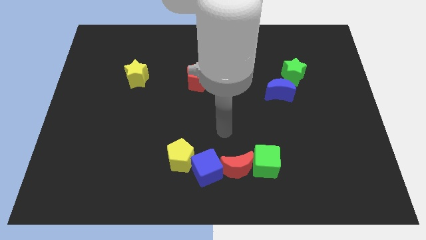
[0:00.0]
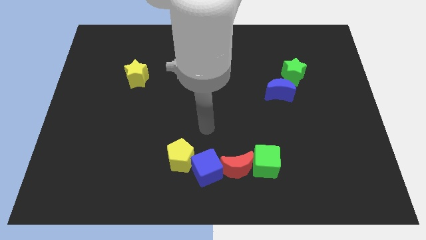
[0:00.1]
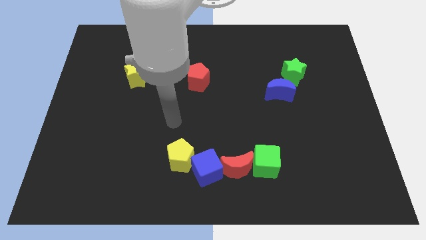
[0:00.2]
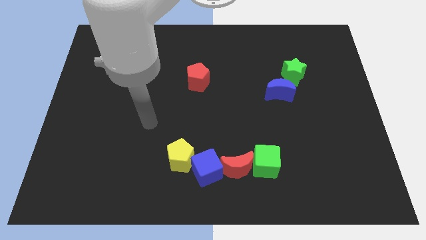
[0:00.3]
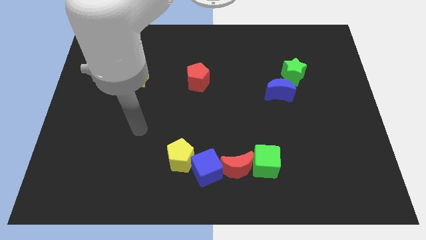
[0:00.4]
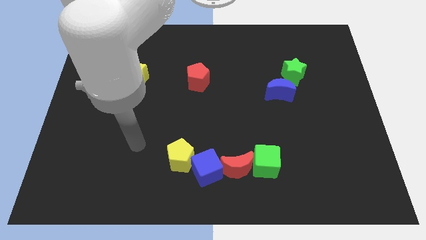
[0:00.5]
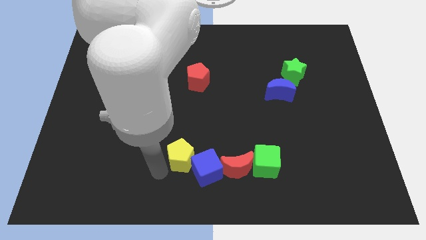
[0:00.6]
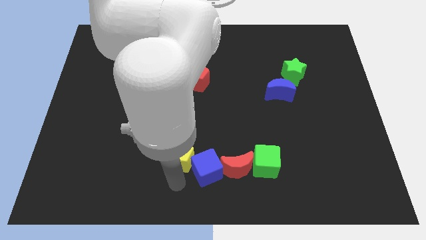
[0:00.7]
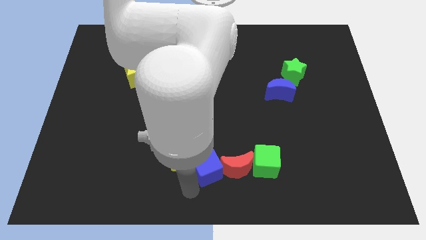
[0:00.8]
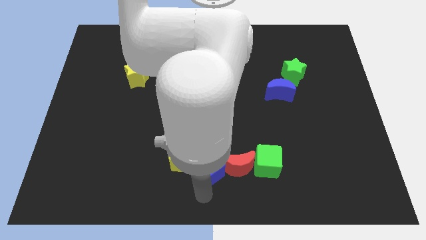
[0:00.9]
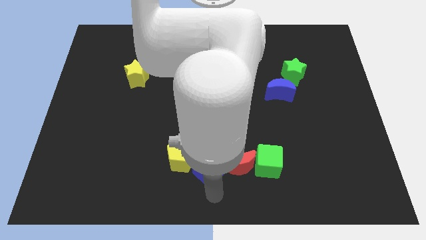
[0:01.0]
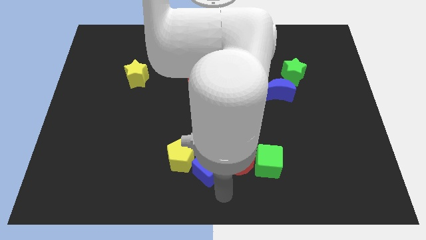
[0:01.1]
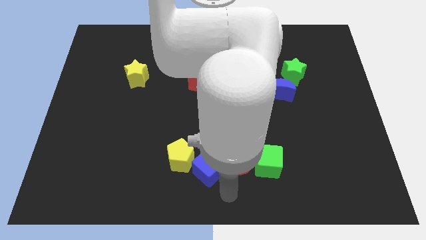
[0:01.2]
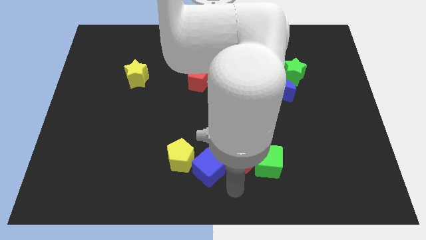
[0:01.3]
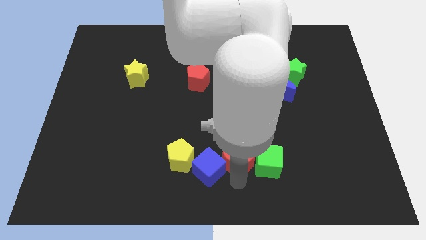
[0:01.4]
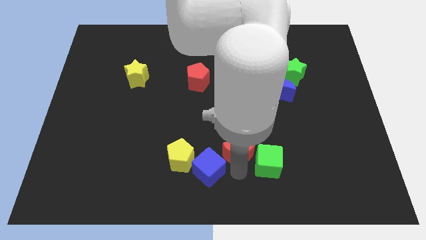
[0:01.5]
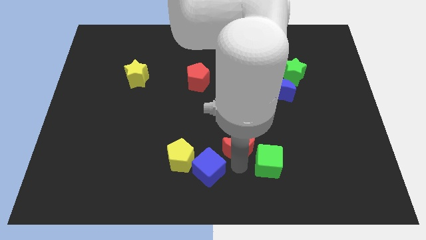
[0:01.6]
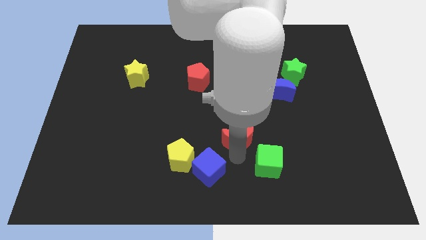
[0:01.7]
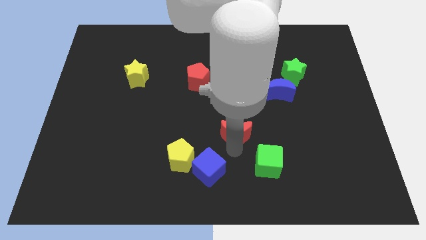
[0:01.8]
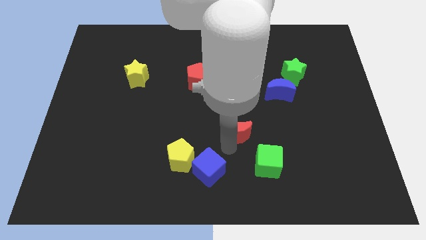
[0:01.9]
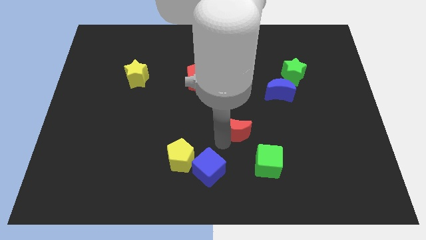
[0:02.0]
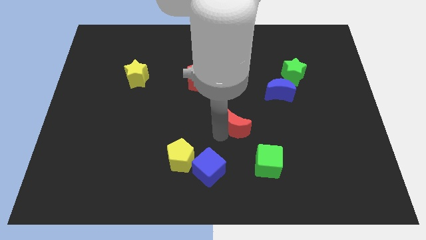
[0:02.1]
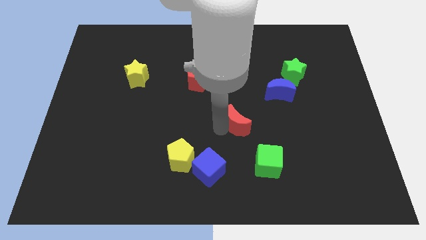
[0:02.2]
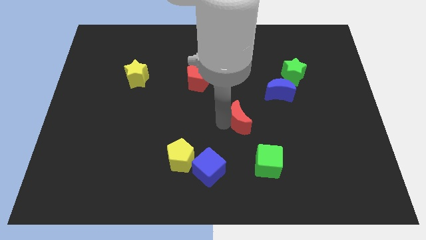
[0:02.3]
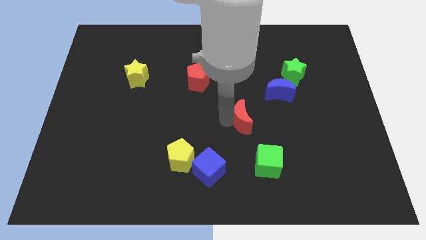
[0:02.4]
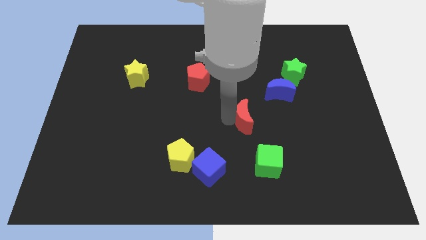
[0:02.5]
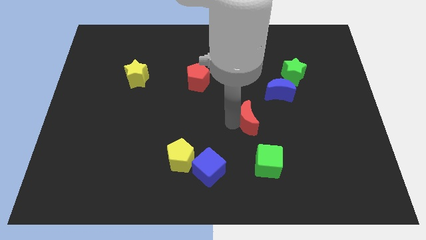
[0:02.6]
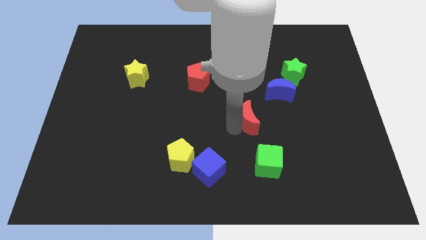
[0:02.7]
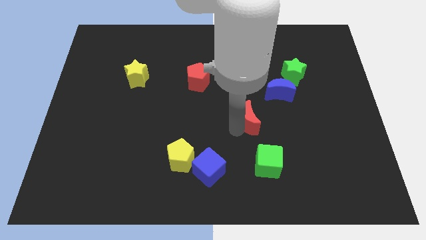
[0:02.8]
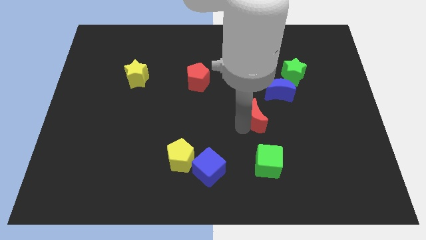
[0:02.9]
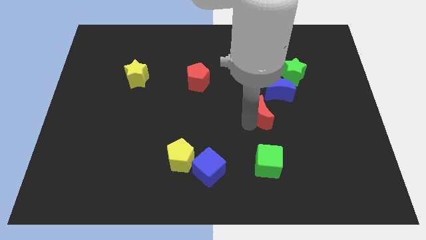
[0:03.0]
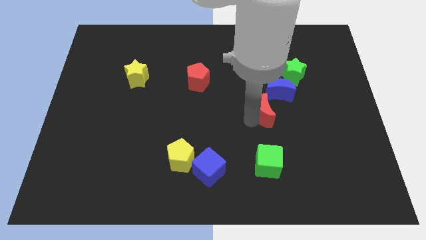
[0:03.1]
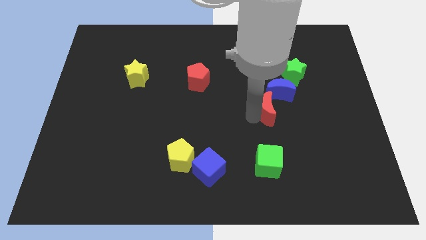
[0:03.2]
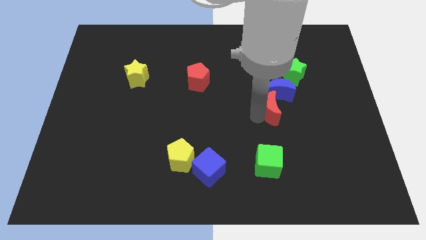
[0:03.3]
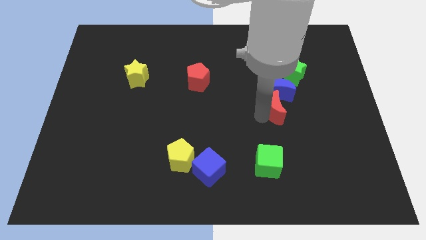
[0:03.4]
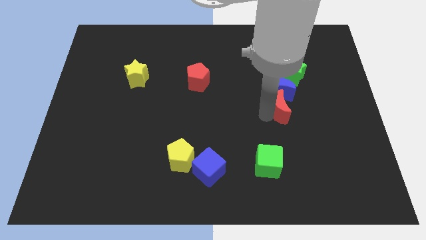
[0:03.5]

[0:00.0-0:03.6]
move the red moon towards the blue moon

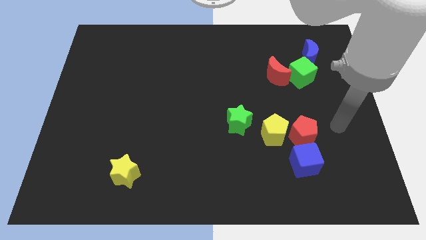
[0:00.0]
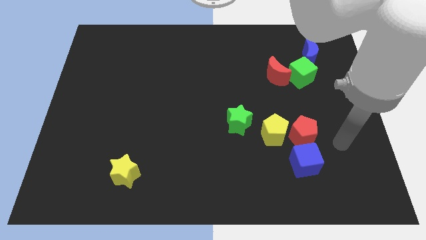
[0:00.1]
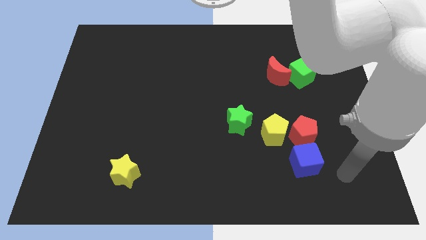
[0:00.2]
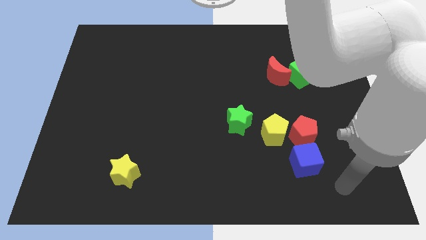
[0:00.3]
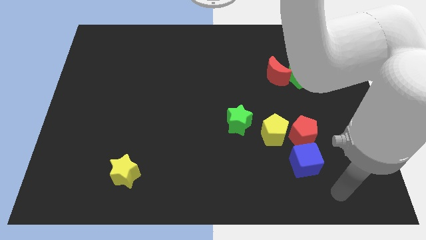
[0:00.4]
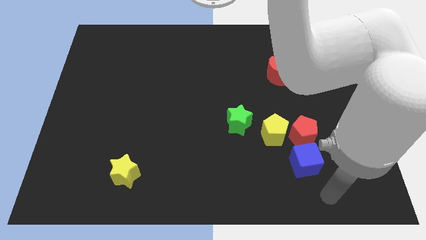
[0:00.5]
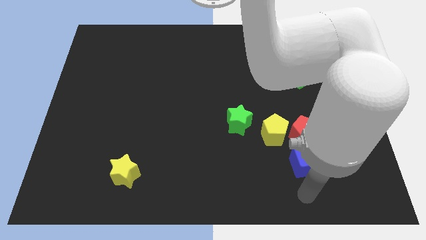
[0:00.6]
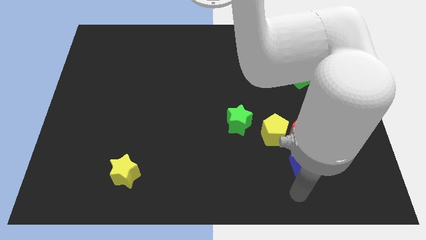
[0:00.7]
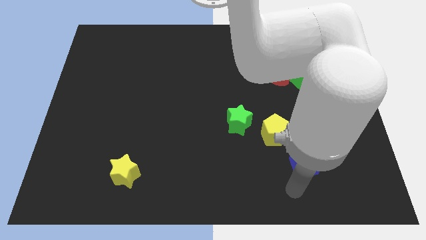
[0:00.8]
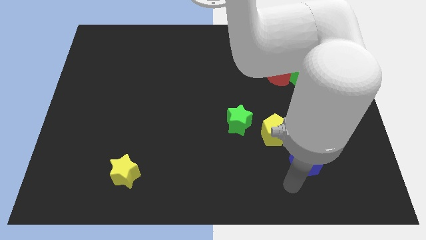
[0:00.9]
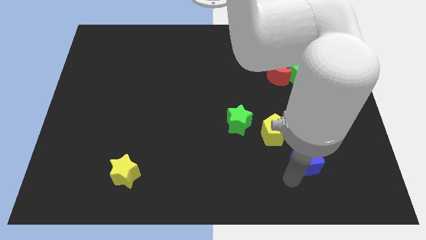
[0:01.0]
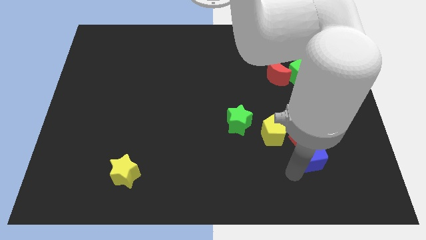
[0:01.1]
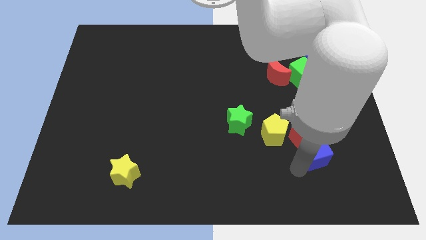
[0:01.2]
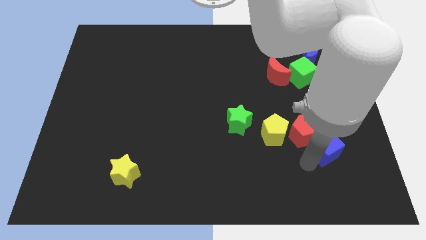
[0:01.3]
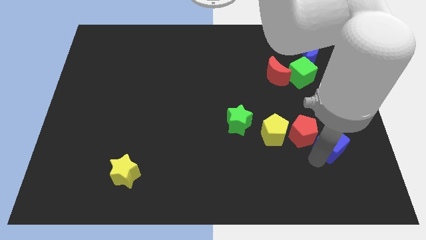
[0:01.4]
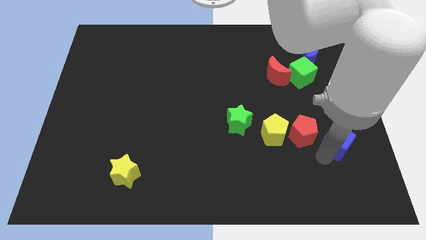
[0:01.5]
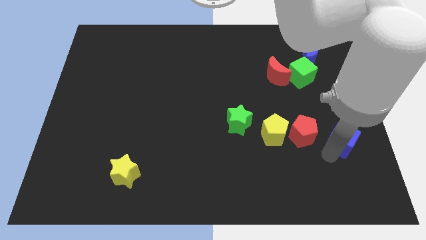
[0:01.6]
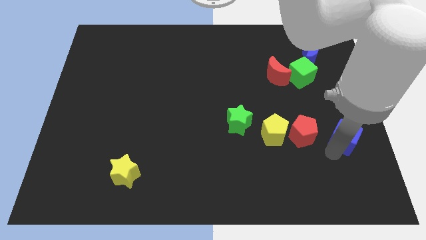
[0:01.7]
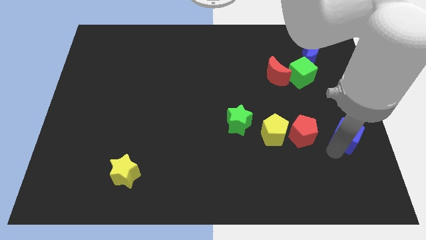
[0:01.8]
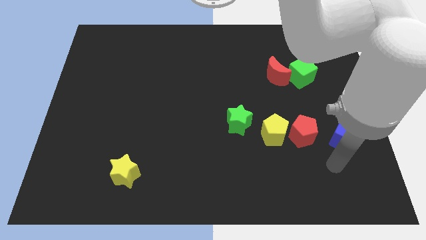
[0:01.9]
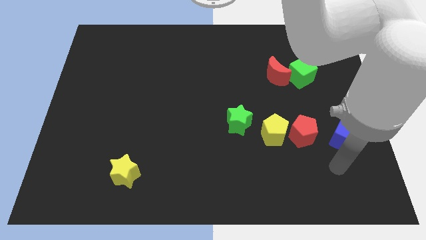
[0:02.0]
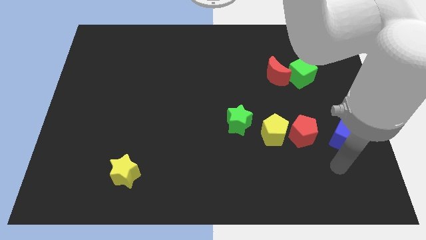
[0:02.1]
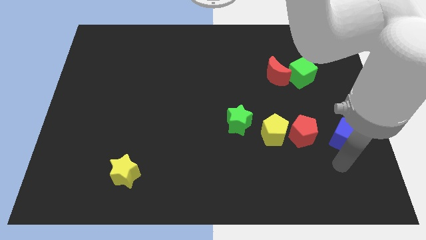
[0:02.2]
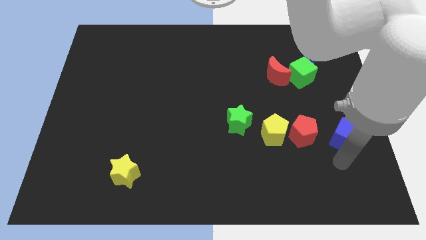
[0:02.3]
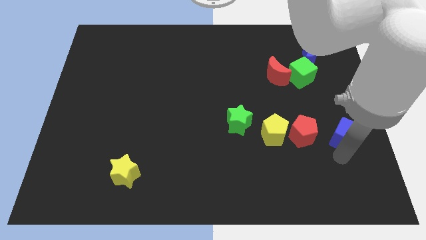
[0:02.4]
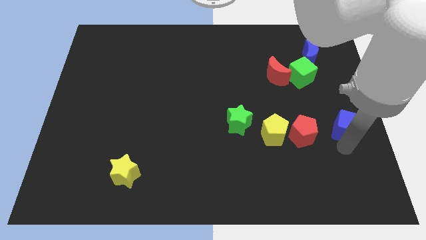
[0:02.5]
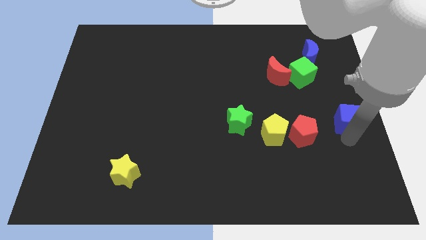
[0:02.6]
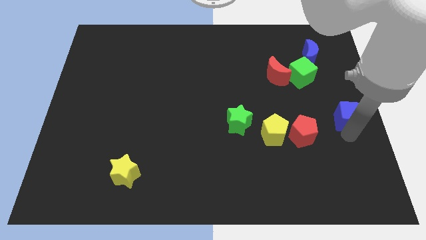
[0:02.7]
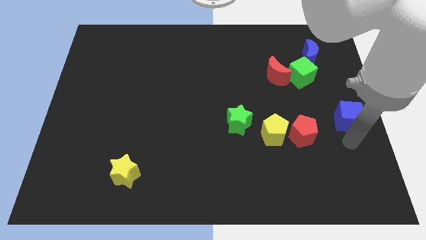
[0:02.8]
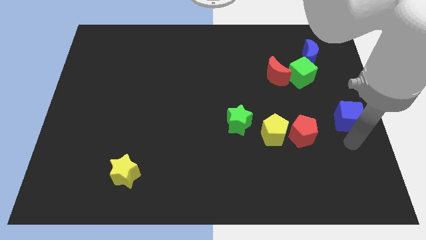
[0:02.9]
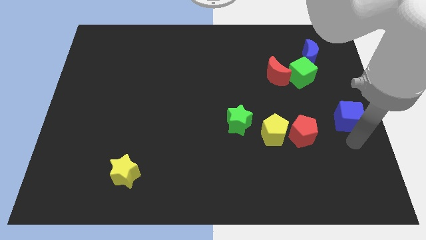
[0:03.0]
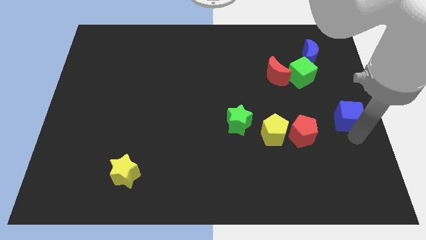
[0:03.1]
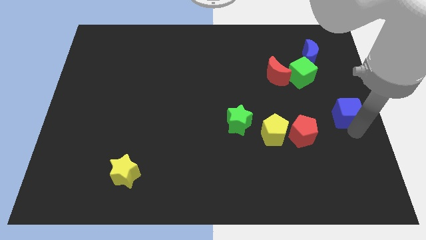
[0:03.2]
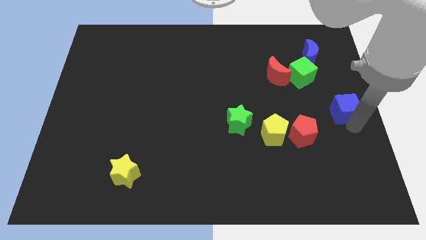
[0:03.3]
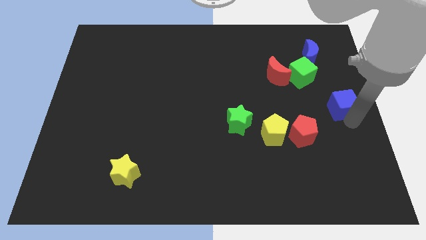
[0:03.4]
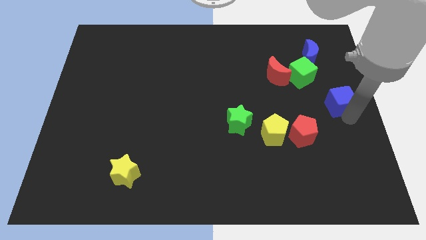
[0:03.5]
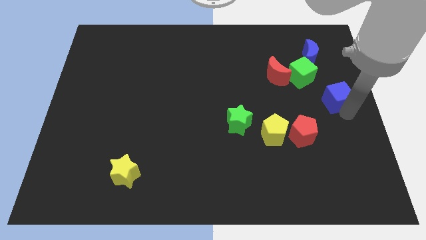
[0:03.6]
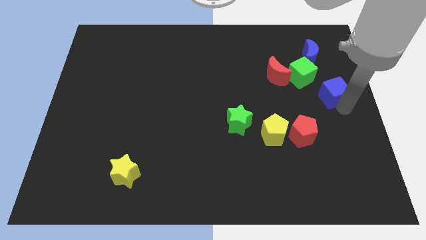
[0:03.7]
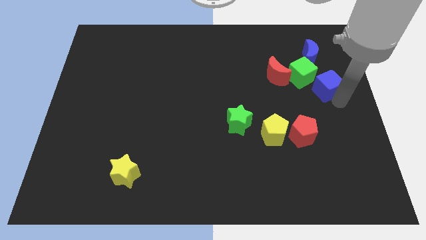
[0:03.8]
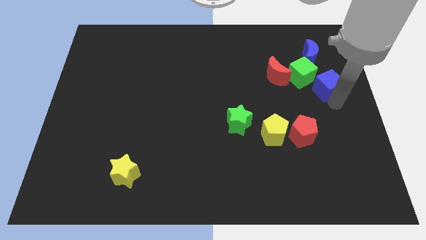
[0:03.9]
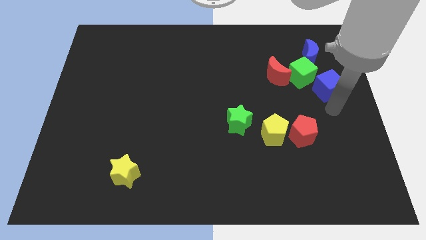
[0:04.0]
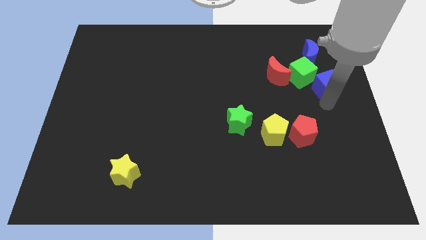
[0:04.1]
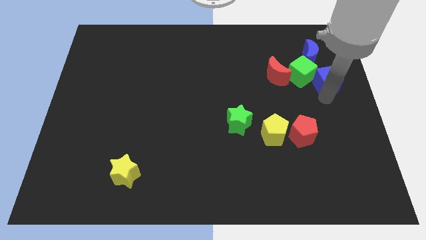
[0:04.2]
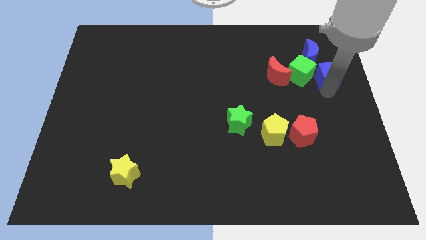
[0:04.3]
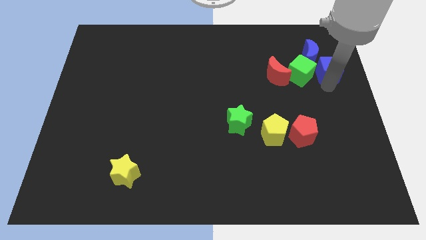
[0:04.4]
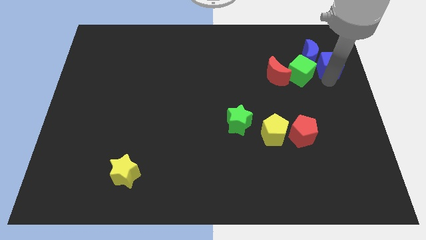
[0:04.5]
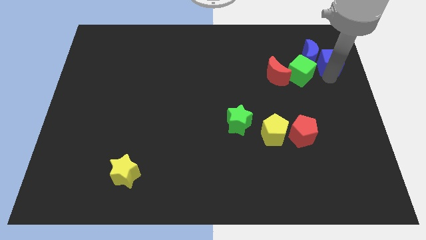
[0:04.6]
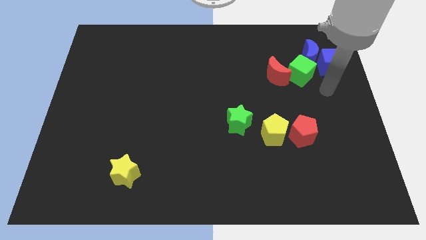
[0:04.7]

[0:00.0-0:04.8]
put the blue cube towards the blue moon
